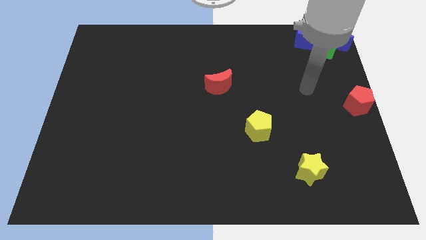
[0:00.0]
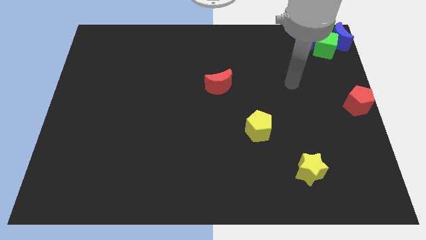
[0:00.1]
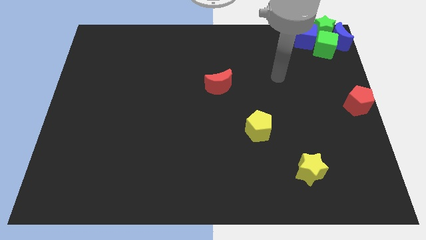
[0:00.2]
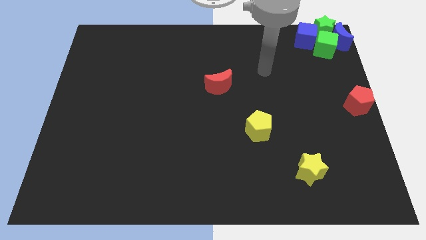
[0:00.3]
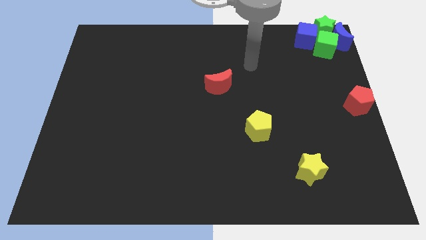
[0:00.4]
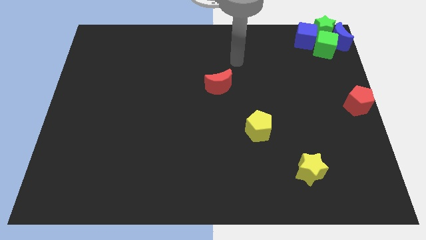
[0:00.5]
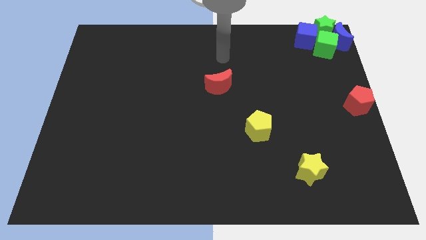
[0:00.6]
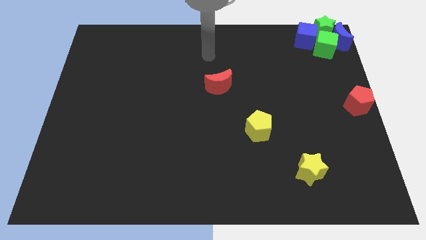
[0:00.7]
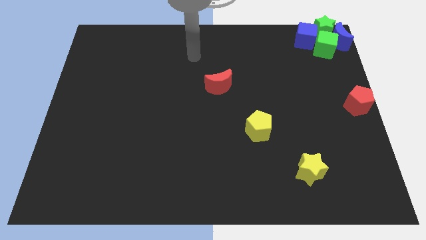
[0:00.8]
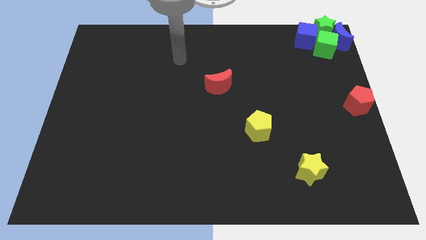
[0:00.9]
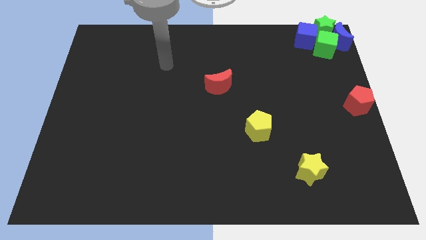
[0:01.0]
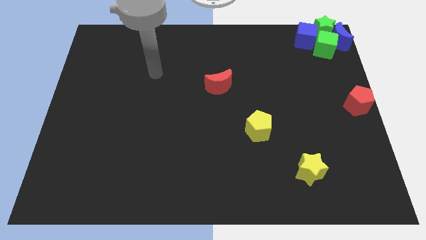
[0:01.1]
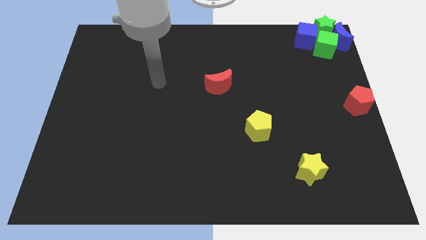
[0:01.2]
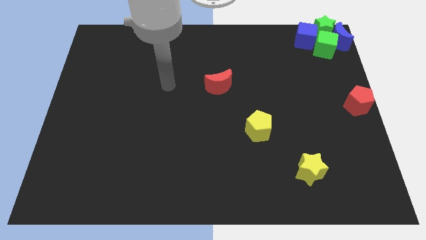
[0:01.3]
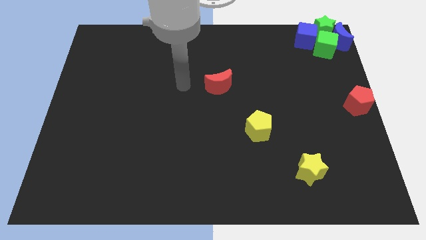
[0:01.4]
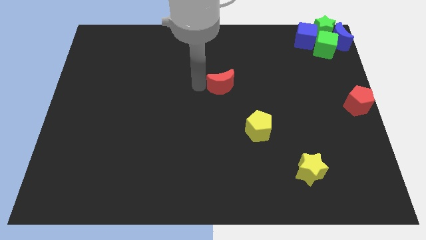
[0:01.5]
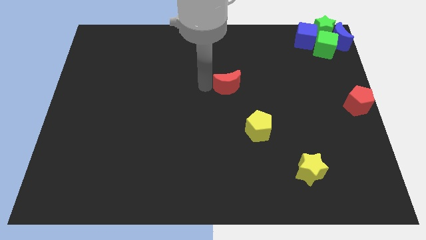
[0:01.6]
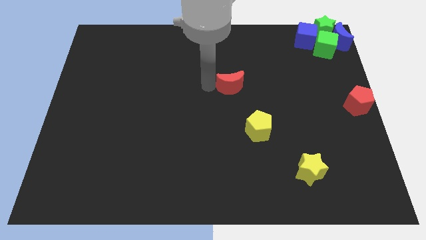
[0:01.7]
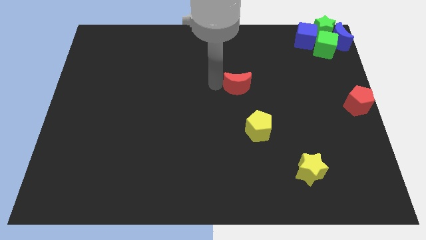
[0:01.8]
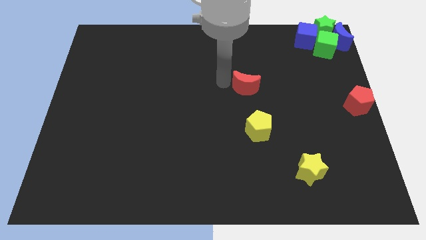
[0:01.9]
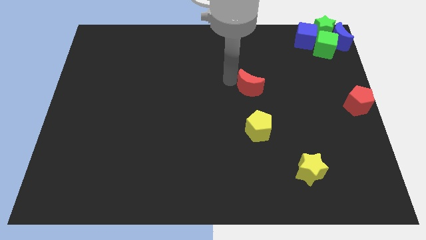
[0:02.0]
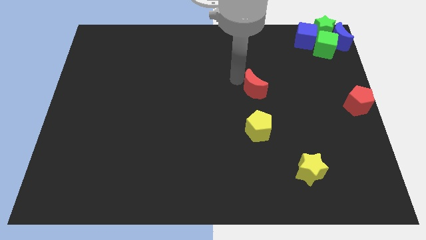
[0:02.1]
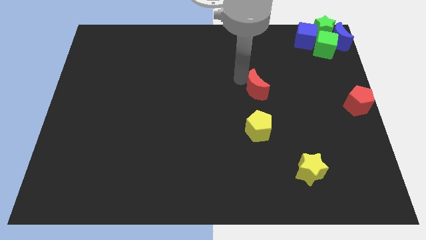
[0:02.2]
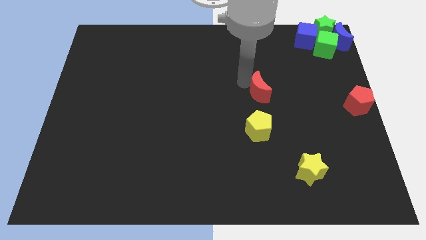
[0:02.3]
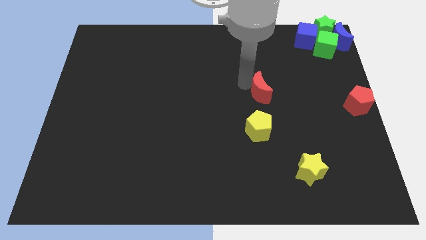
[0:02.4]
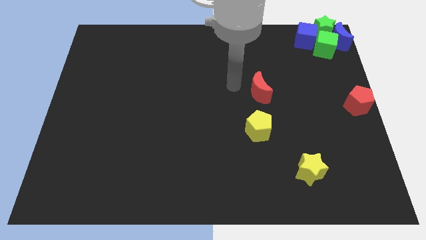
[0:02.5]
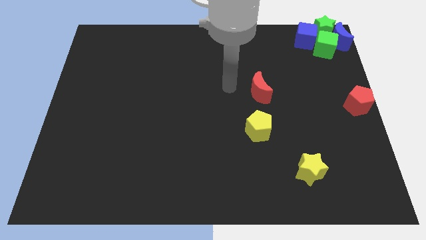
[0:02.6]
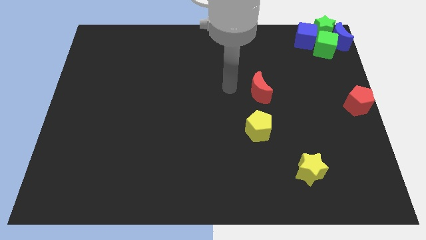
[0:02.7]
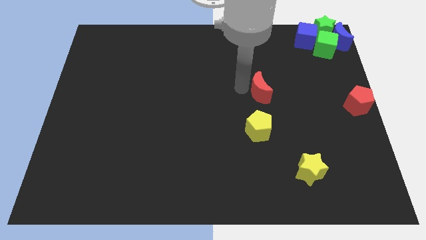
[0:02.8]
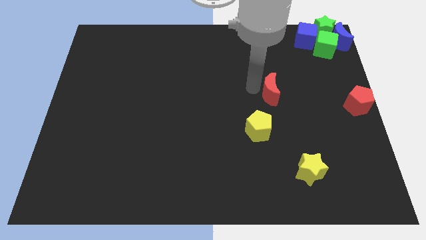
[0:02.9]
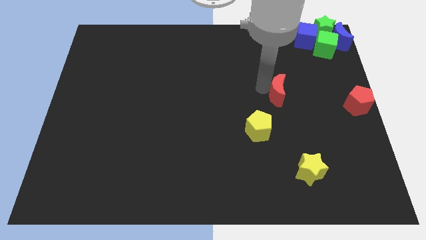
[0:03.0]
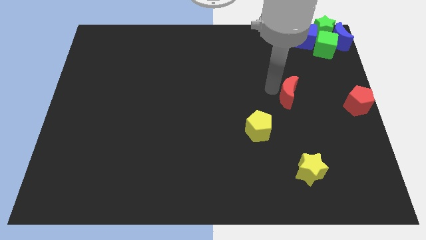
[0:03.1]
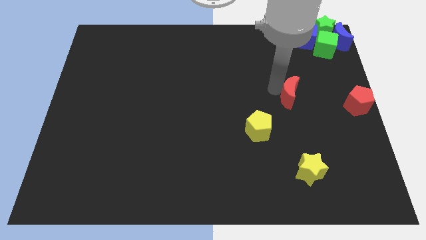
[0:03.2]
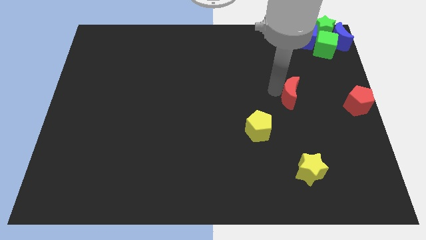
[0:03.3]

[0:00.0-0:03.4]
push the red moon diagonally top right to the yellow pentagon

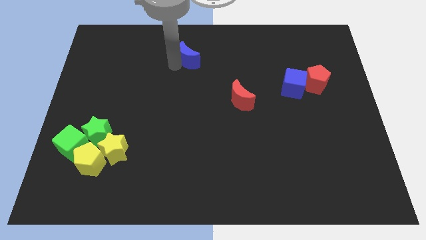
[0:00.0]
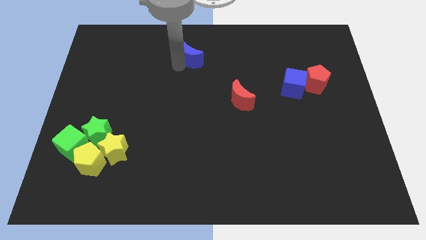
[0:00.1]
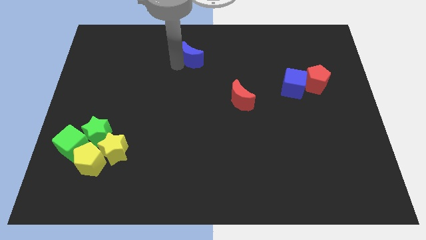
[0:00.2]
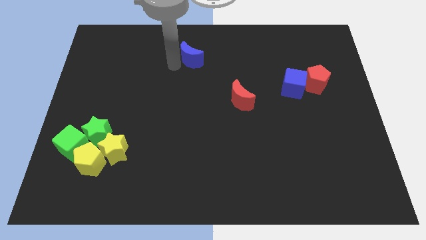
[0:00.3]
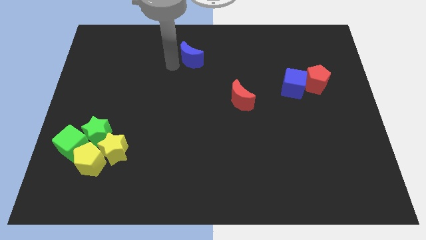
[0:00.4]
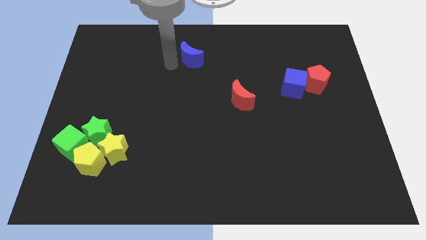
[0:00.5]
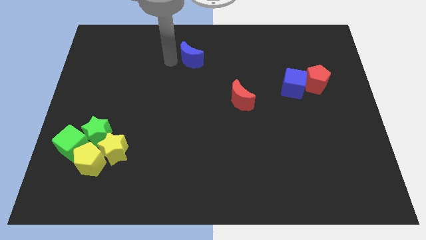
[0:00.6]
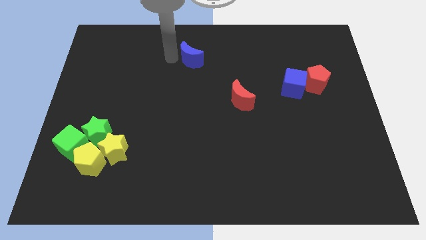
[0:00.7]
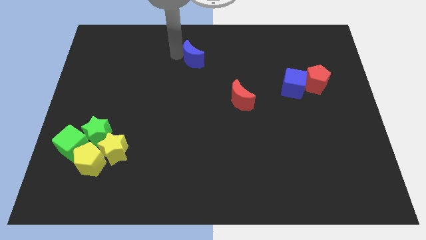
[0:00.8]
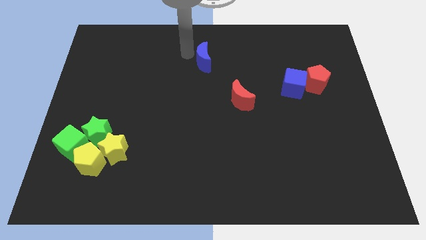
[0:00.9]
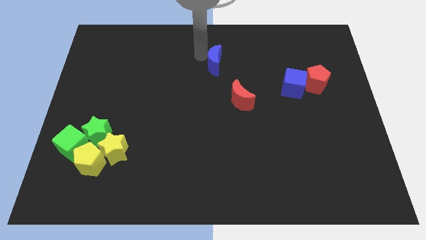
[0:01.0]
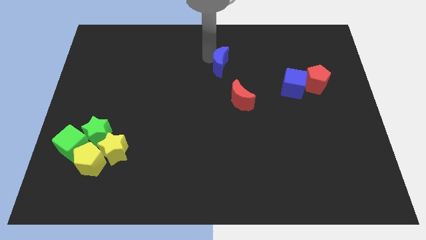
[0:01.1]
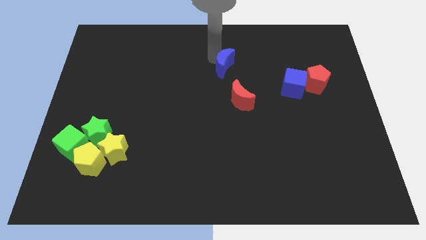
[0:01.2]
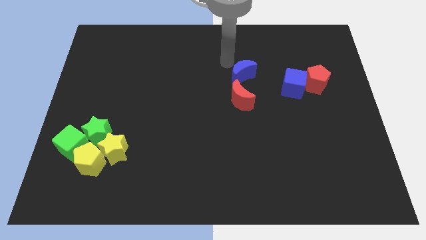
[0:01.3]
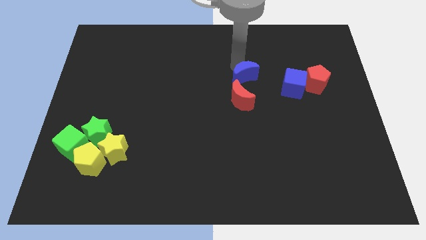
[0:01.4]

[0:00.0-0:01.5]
push the blue crescent to the top of the red crescent

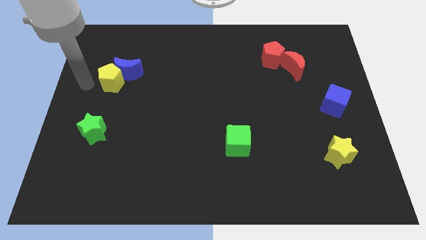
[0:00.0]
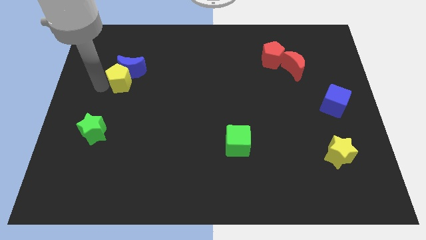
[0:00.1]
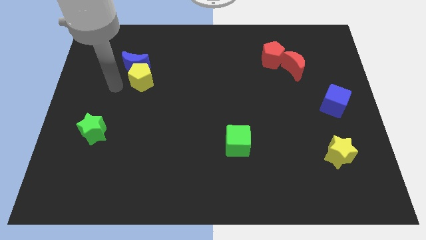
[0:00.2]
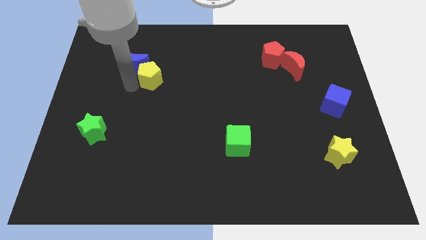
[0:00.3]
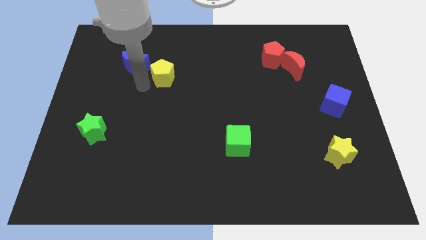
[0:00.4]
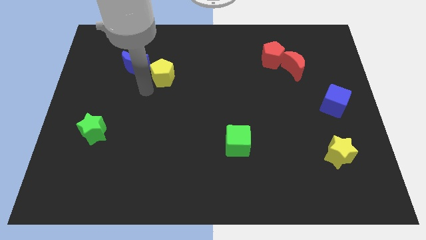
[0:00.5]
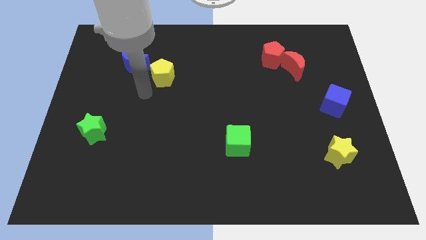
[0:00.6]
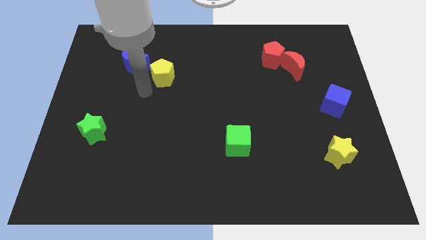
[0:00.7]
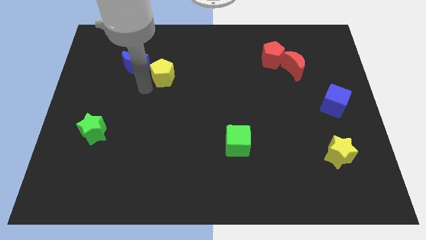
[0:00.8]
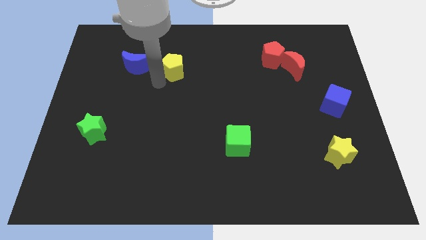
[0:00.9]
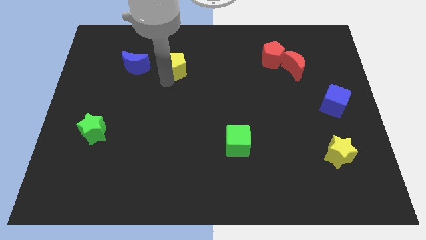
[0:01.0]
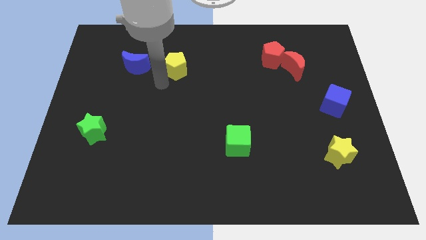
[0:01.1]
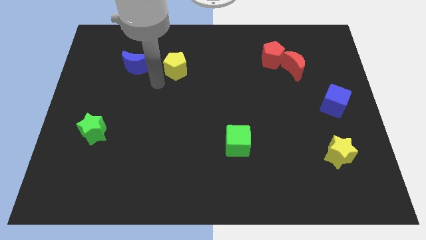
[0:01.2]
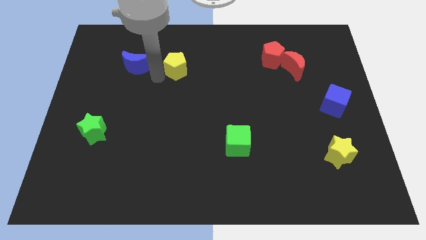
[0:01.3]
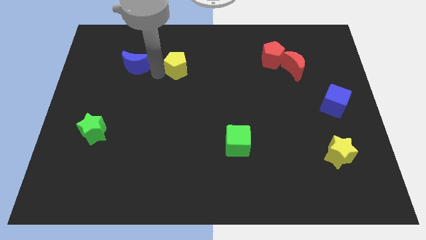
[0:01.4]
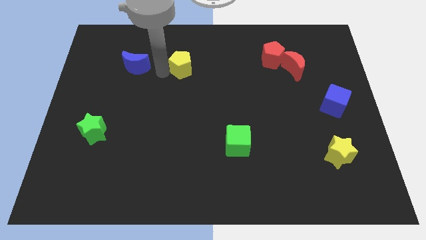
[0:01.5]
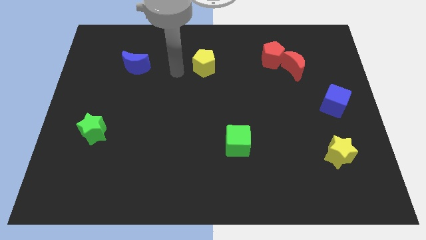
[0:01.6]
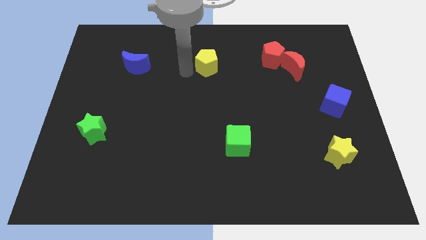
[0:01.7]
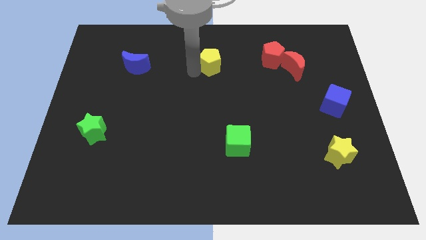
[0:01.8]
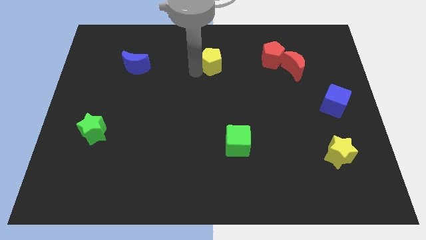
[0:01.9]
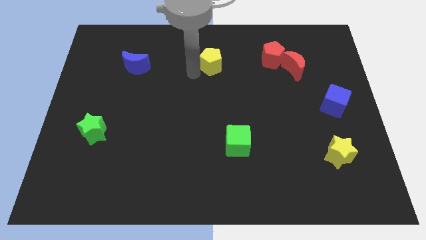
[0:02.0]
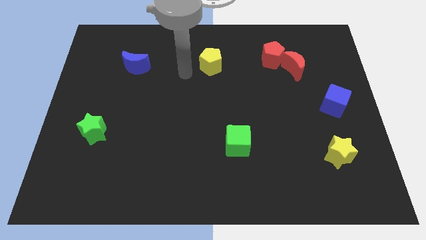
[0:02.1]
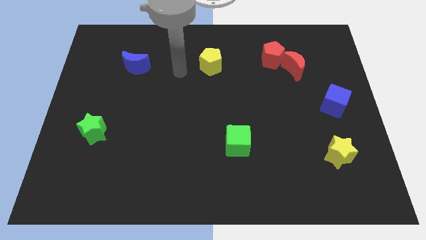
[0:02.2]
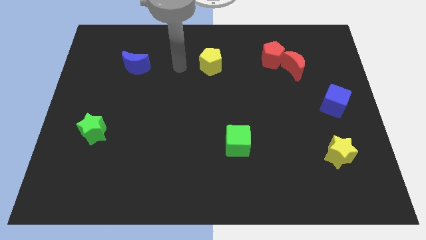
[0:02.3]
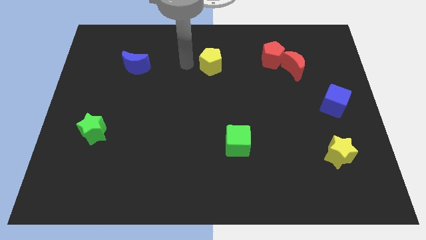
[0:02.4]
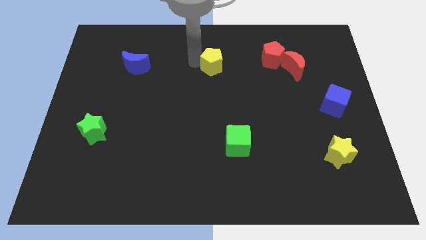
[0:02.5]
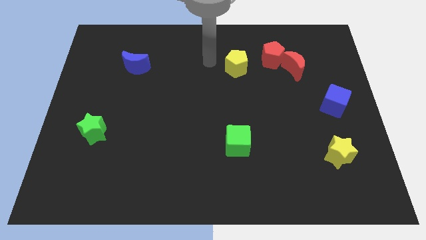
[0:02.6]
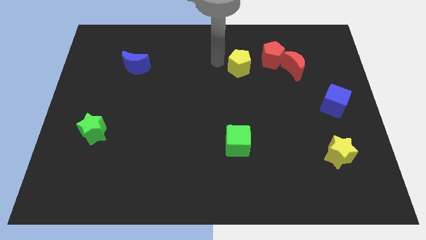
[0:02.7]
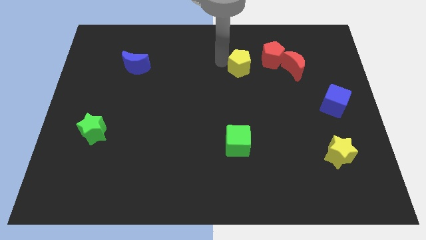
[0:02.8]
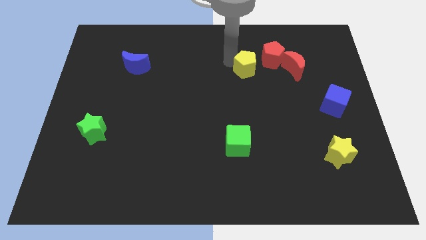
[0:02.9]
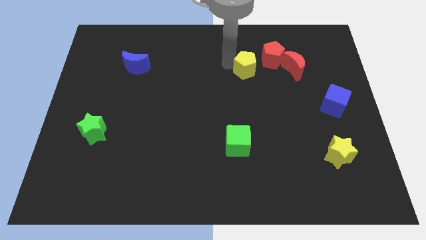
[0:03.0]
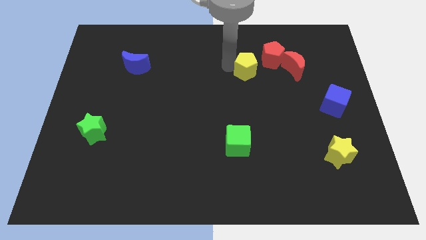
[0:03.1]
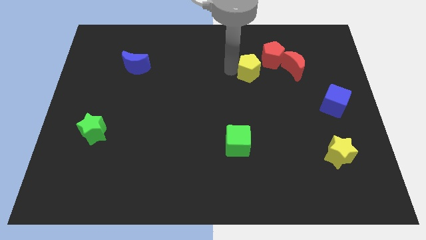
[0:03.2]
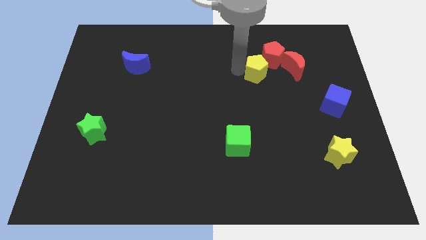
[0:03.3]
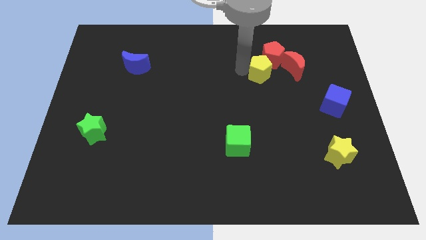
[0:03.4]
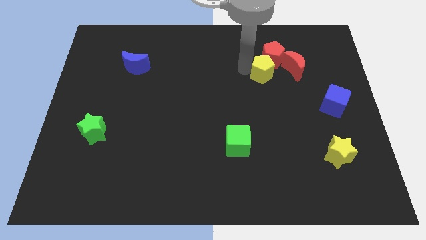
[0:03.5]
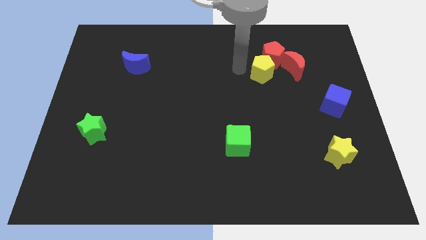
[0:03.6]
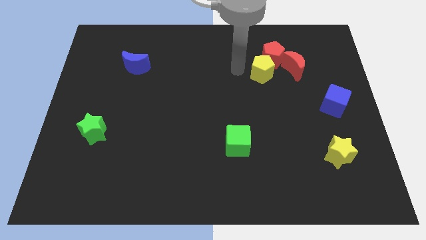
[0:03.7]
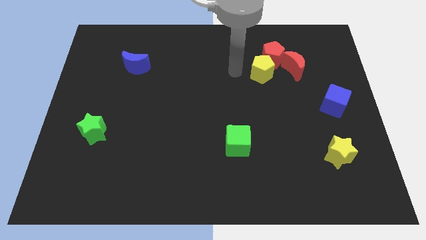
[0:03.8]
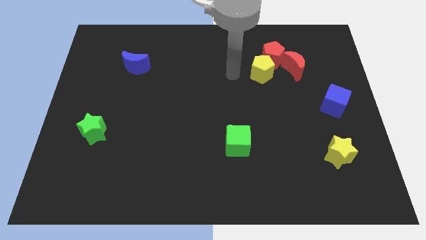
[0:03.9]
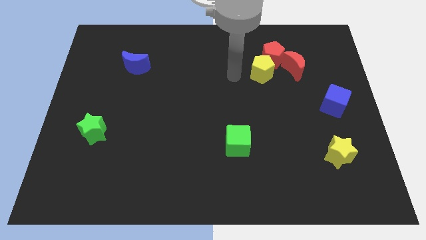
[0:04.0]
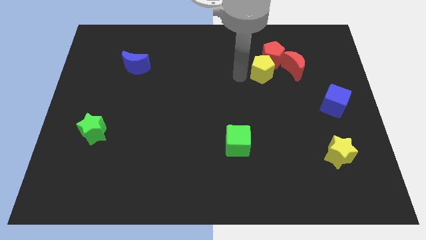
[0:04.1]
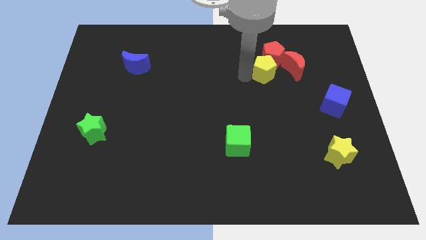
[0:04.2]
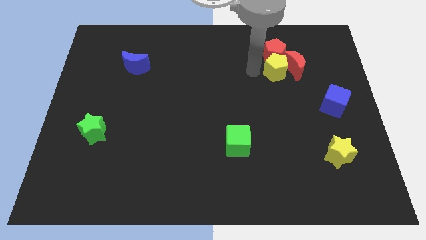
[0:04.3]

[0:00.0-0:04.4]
move the yellow pentagon below the red pantagon
